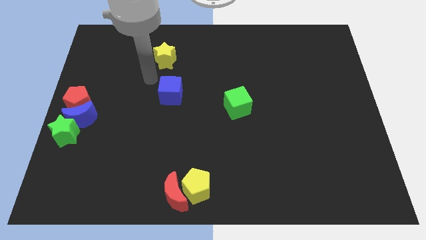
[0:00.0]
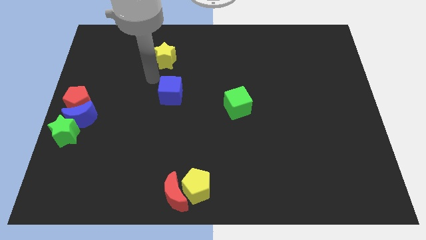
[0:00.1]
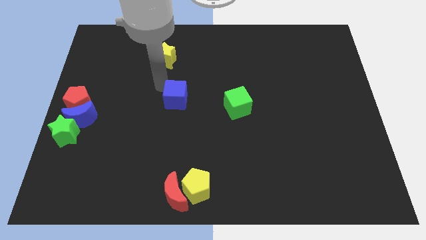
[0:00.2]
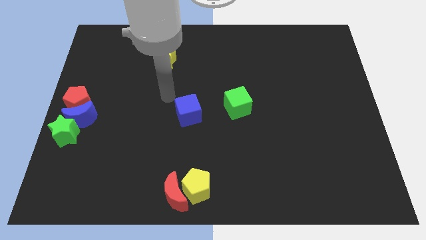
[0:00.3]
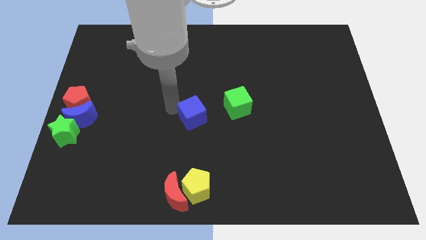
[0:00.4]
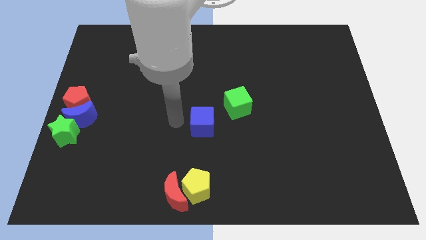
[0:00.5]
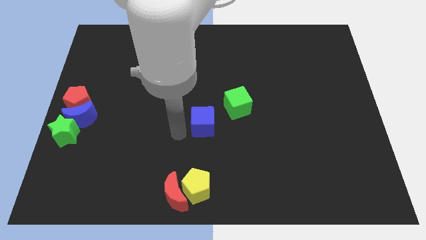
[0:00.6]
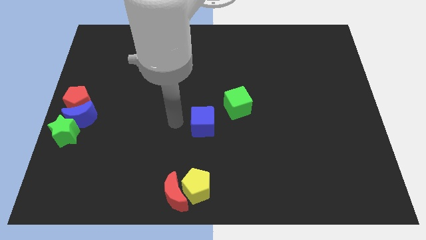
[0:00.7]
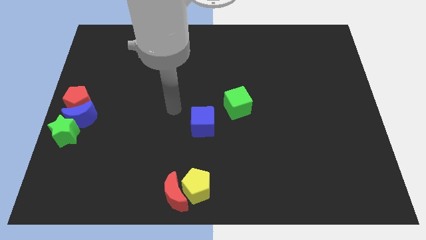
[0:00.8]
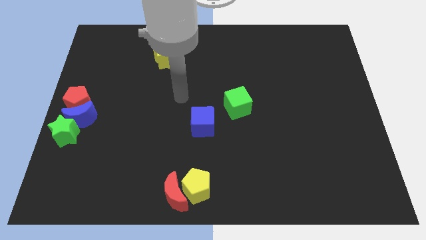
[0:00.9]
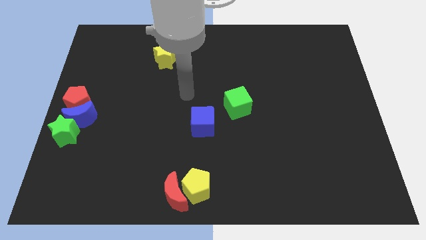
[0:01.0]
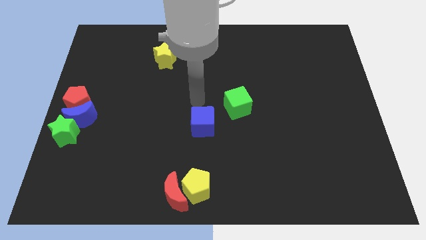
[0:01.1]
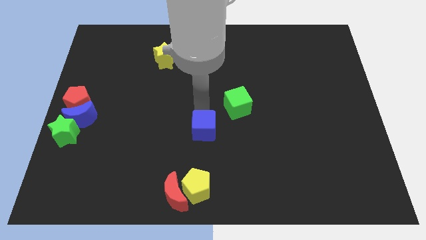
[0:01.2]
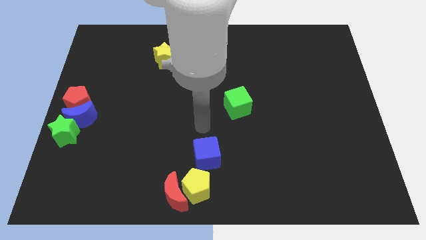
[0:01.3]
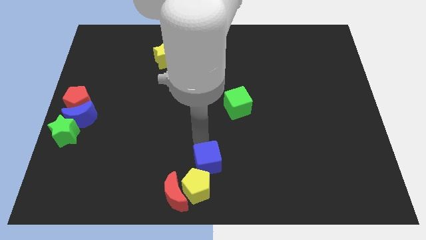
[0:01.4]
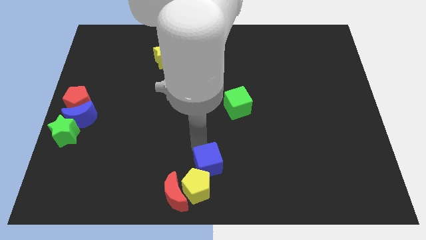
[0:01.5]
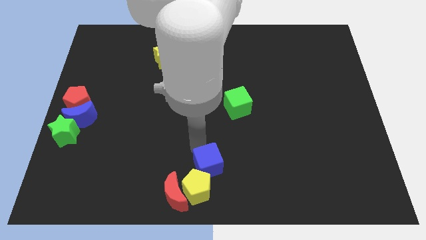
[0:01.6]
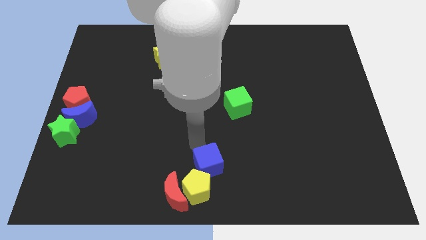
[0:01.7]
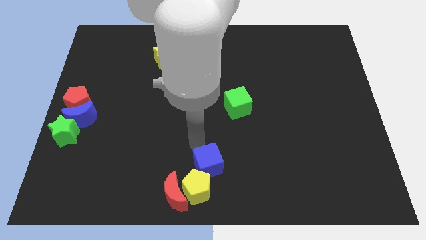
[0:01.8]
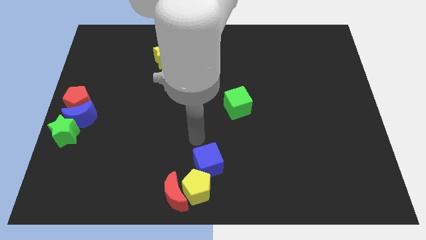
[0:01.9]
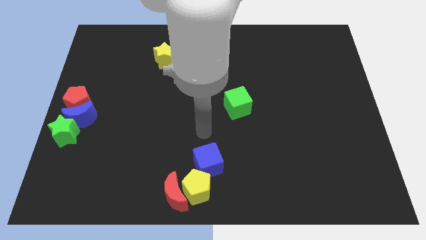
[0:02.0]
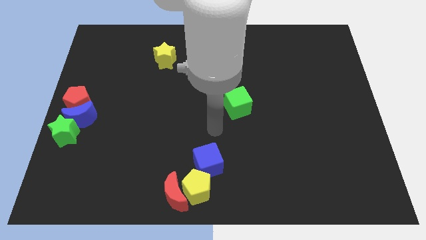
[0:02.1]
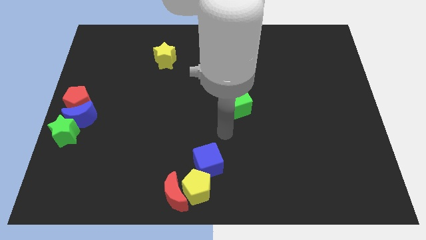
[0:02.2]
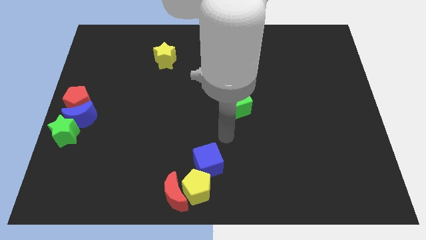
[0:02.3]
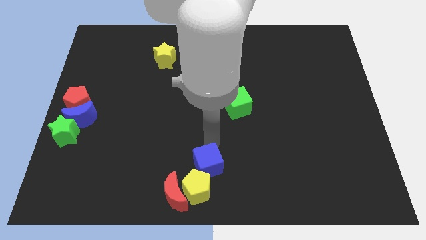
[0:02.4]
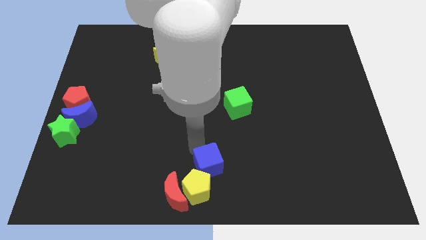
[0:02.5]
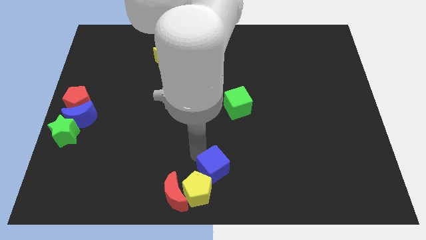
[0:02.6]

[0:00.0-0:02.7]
place blue cube above yellow pentagon

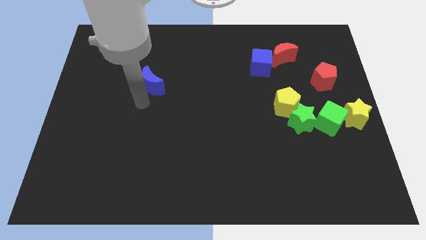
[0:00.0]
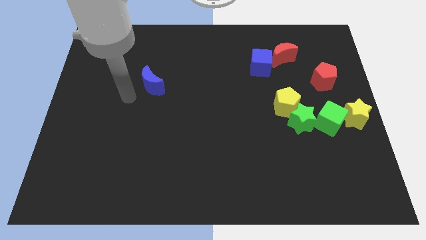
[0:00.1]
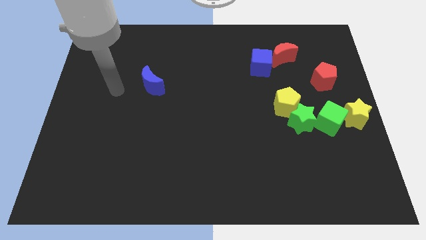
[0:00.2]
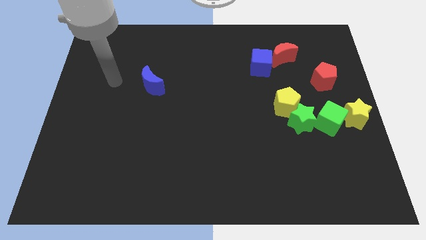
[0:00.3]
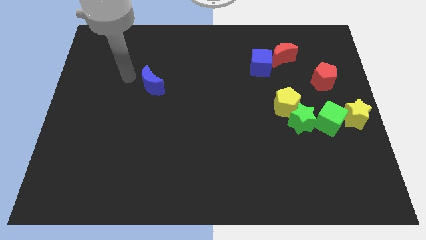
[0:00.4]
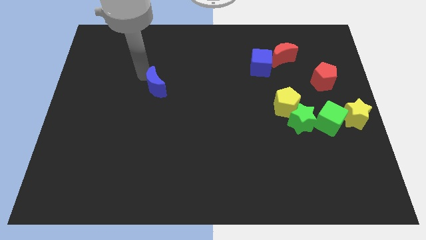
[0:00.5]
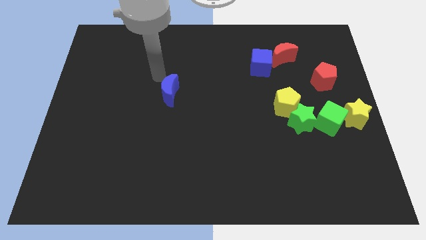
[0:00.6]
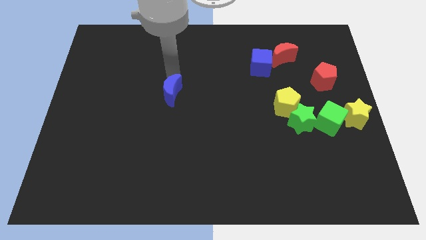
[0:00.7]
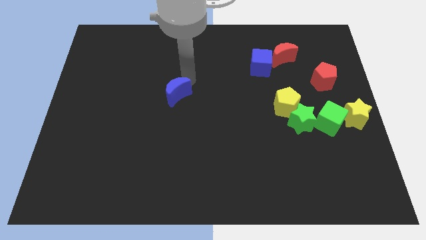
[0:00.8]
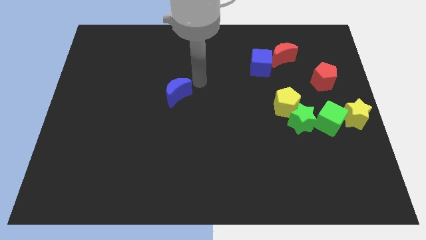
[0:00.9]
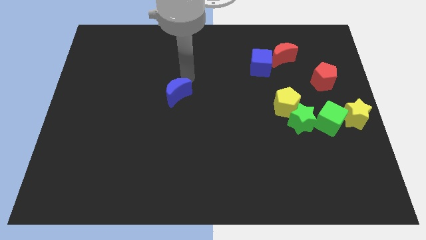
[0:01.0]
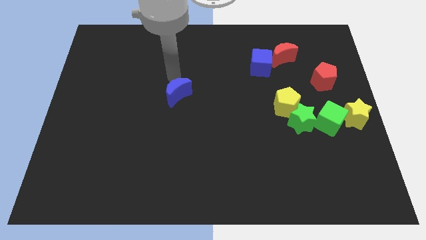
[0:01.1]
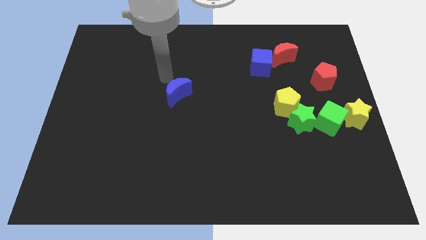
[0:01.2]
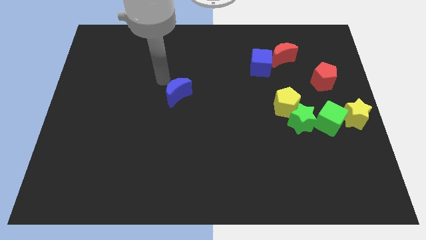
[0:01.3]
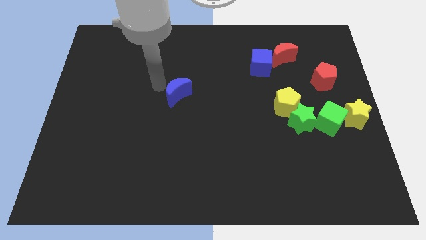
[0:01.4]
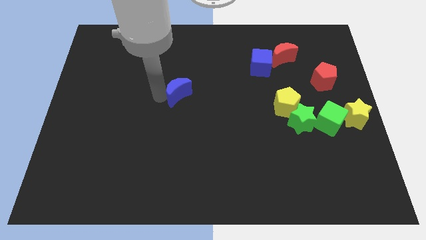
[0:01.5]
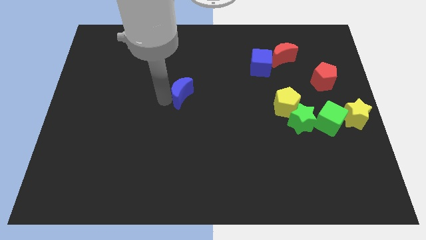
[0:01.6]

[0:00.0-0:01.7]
push the blue crescent towards the yellow pentagon

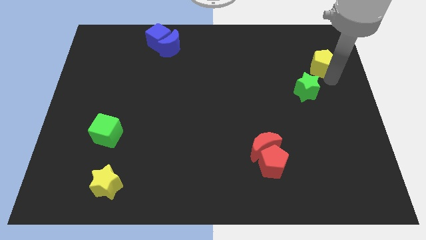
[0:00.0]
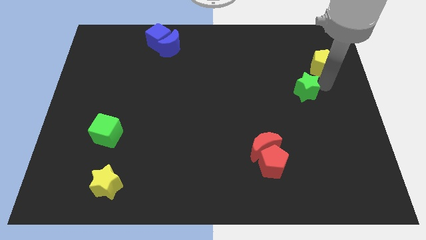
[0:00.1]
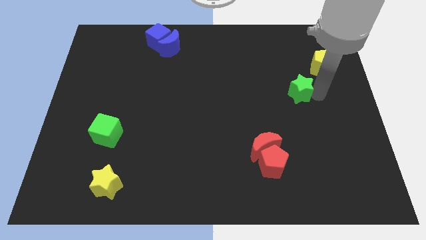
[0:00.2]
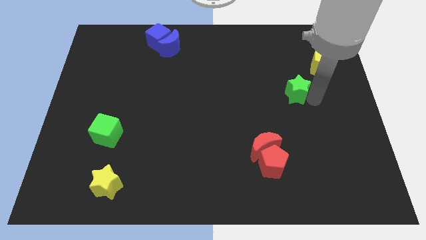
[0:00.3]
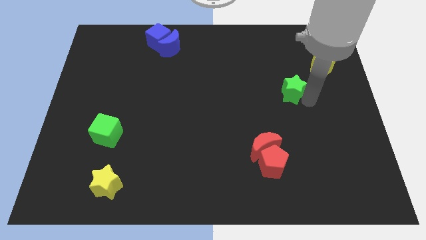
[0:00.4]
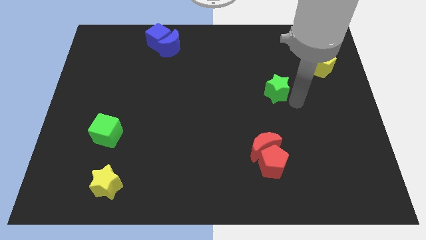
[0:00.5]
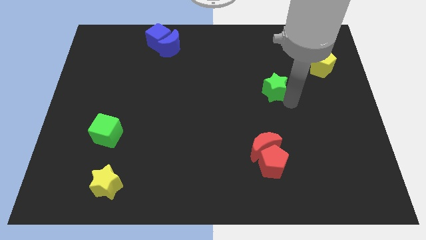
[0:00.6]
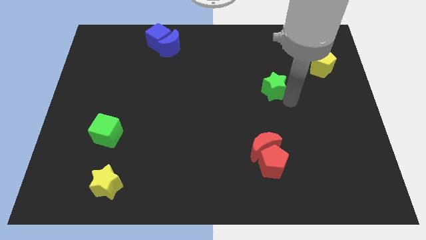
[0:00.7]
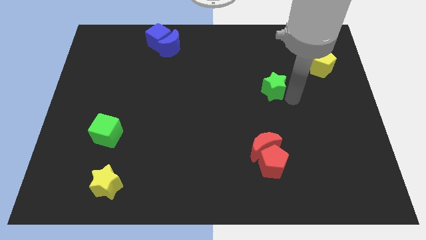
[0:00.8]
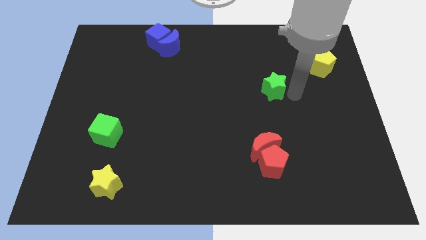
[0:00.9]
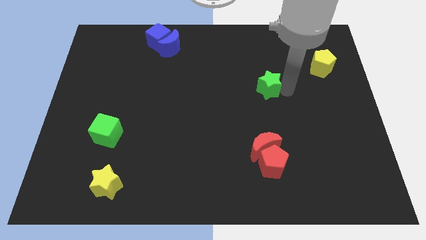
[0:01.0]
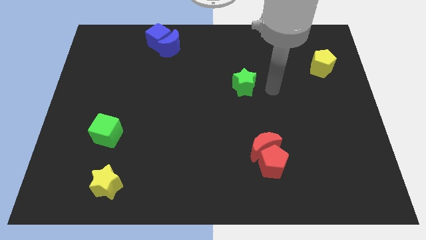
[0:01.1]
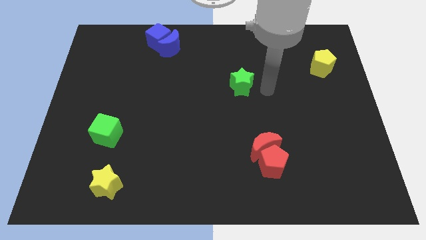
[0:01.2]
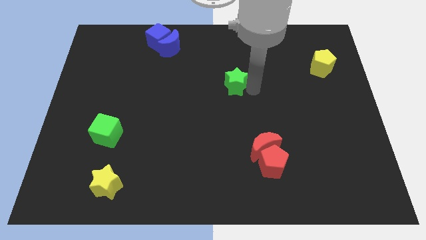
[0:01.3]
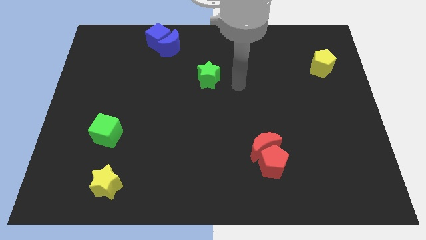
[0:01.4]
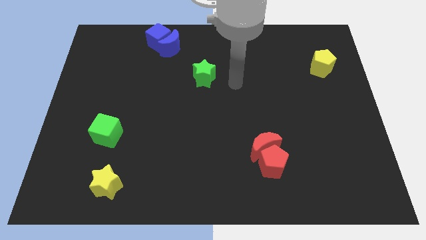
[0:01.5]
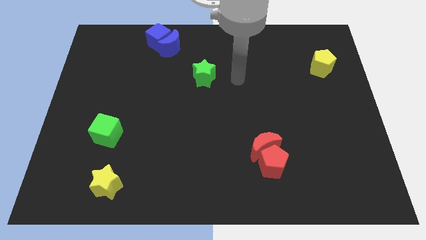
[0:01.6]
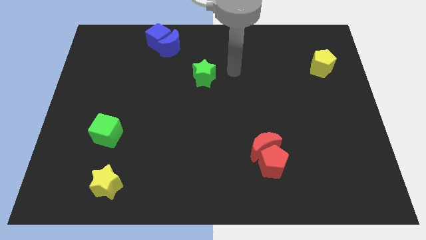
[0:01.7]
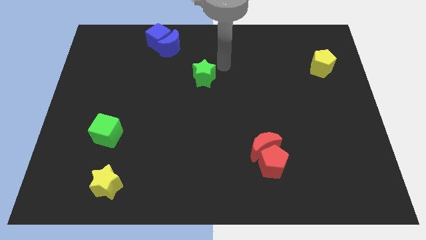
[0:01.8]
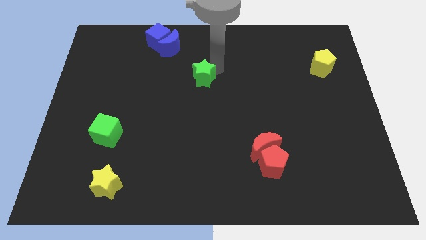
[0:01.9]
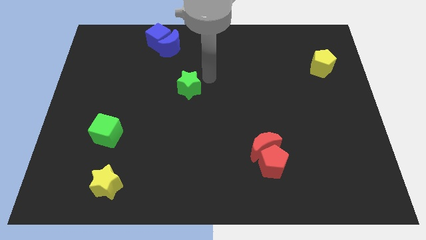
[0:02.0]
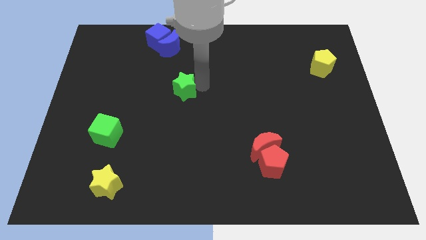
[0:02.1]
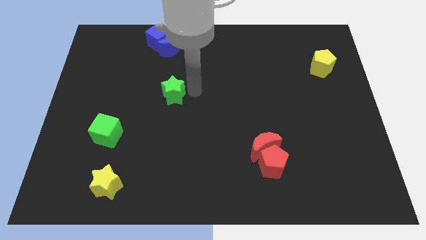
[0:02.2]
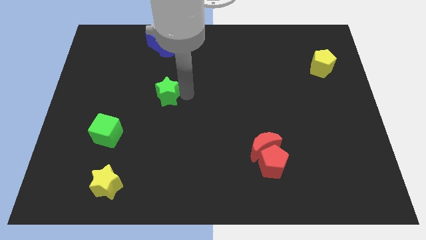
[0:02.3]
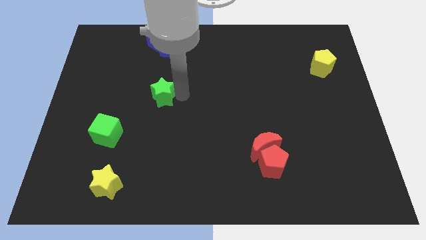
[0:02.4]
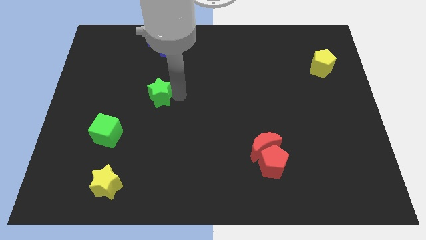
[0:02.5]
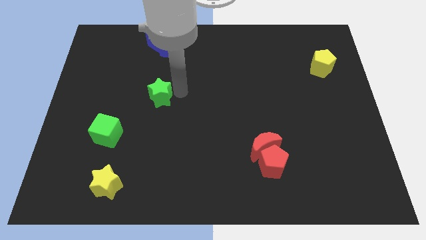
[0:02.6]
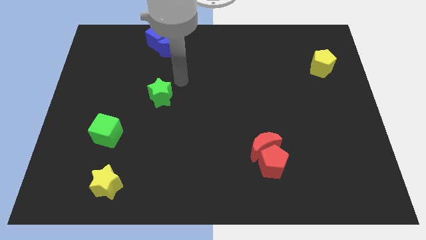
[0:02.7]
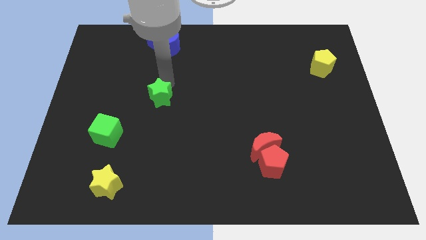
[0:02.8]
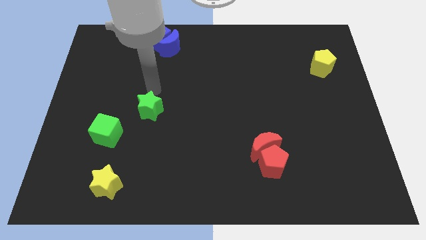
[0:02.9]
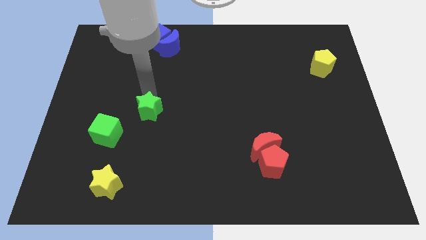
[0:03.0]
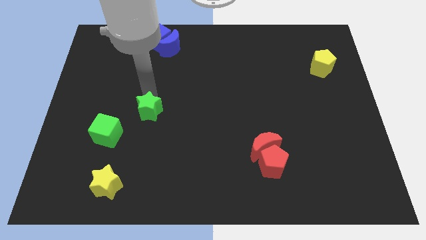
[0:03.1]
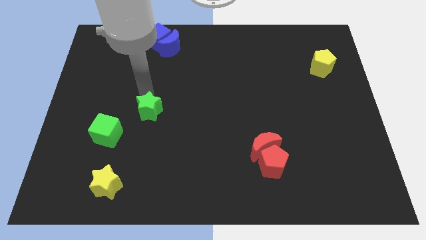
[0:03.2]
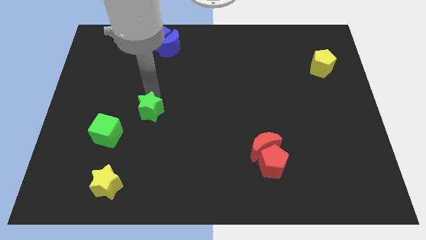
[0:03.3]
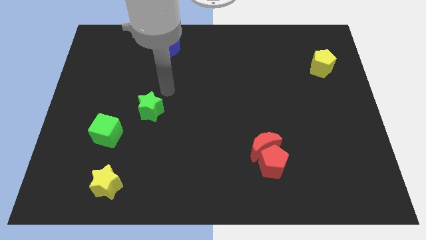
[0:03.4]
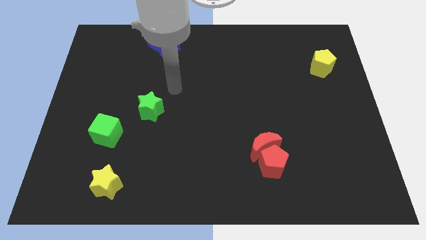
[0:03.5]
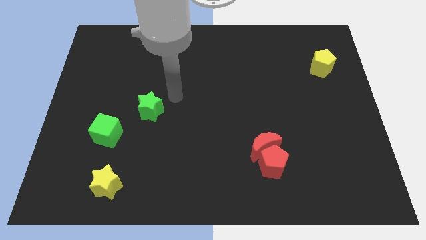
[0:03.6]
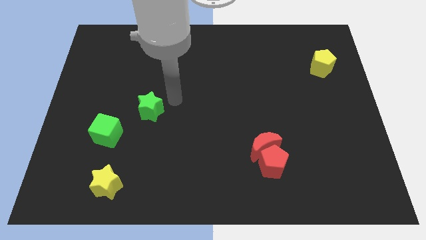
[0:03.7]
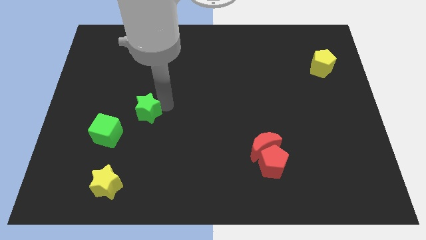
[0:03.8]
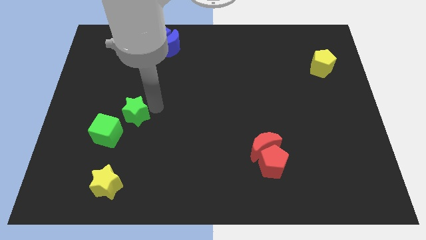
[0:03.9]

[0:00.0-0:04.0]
push the green star close to the green cube

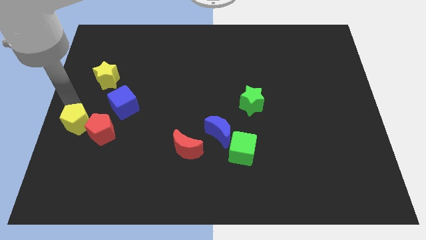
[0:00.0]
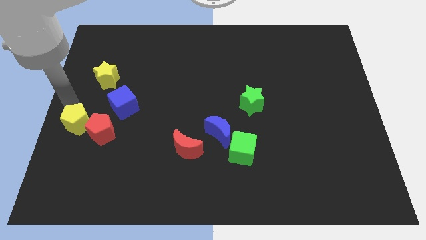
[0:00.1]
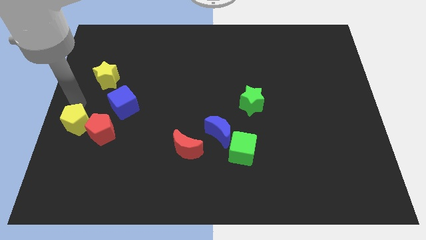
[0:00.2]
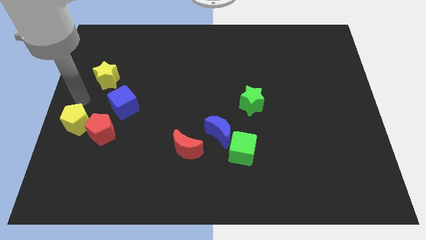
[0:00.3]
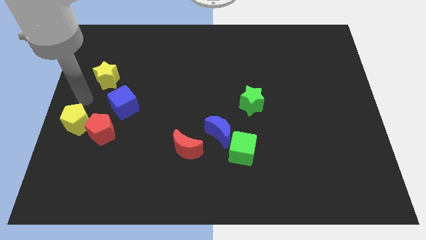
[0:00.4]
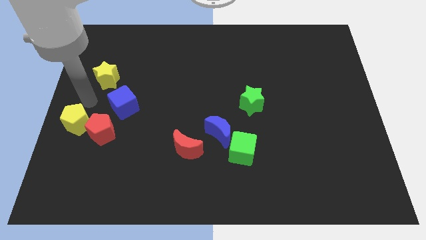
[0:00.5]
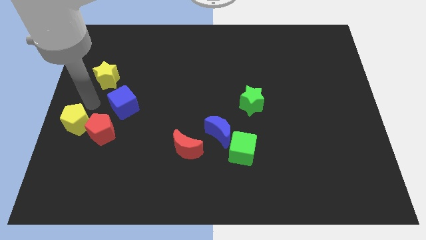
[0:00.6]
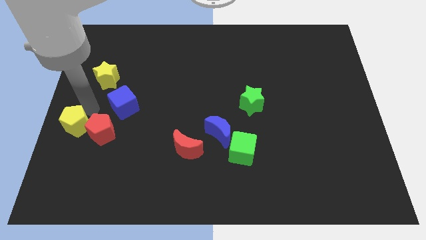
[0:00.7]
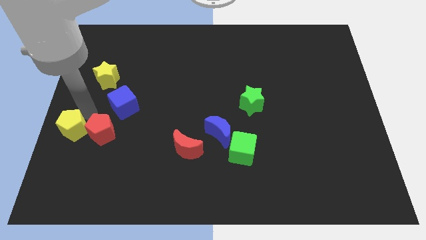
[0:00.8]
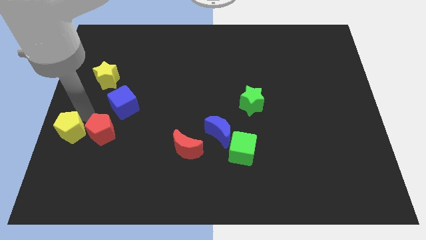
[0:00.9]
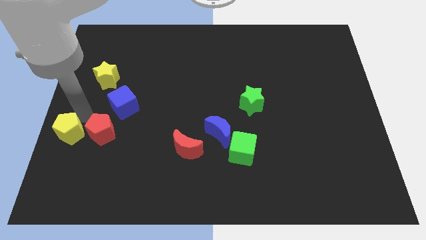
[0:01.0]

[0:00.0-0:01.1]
place the yellow pentagon to the left side of red pentagon
